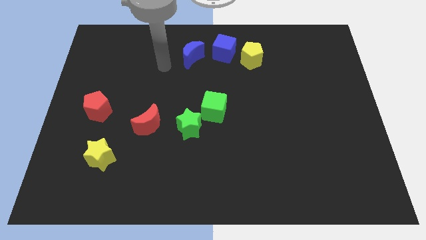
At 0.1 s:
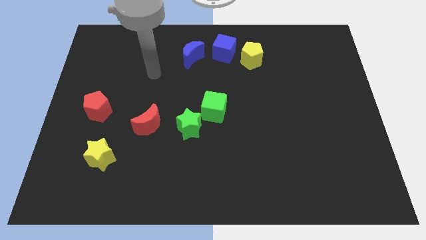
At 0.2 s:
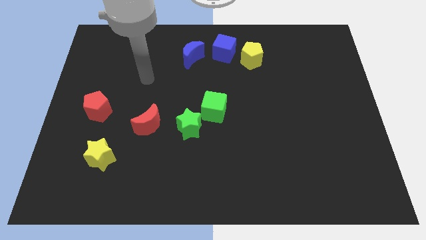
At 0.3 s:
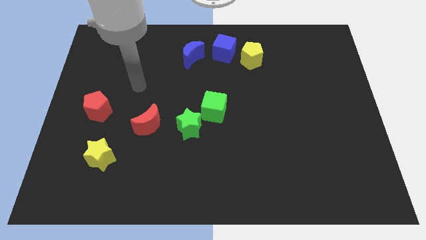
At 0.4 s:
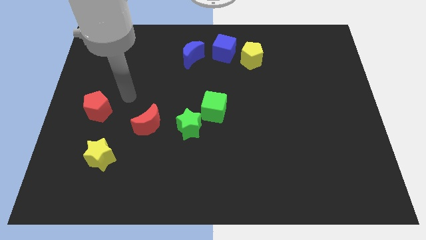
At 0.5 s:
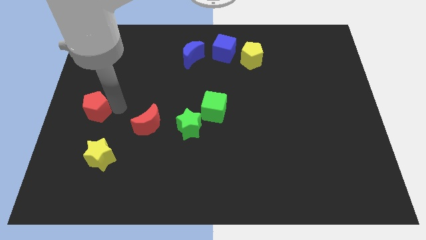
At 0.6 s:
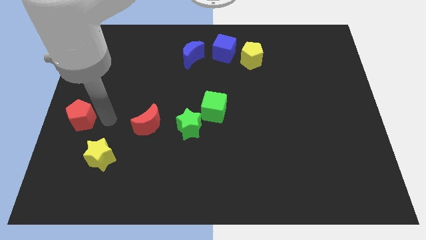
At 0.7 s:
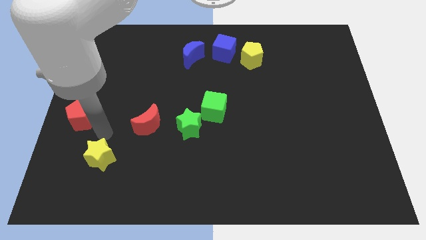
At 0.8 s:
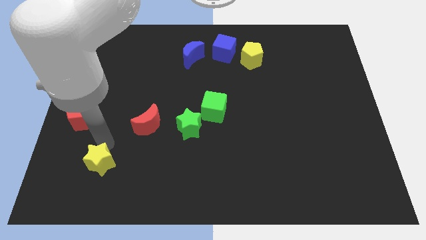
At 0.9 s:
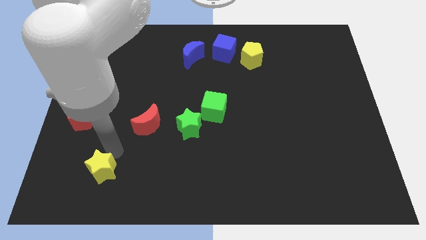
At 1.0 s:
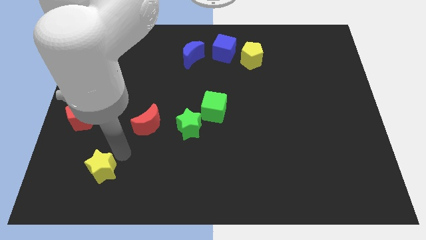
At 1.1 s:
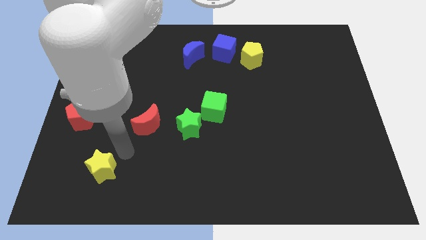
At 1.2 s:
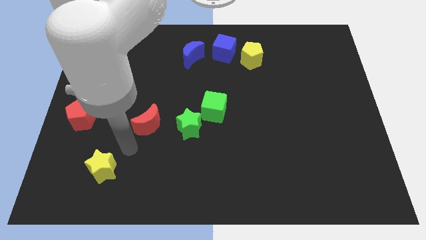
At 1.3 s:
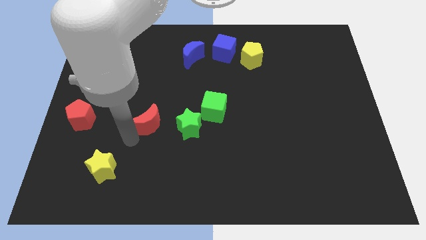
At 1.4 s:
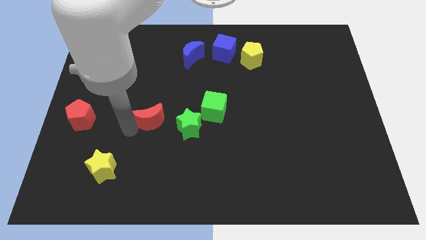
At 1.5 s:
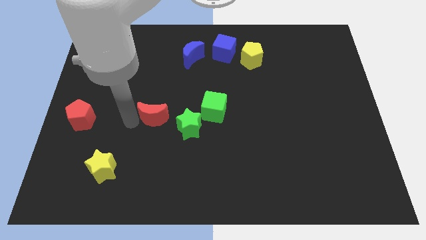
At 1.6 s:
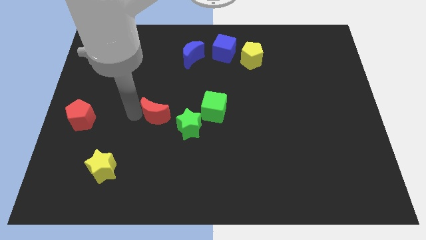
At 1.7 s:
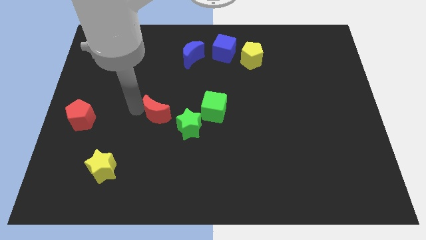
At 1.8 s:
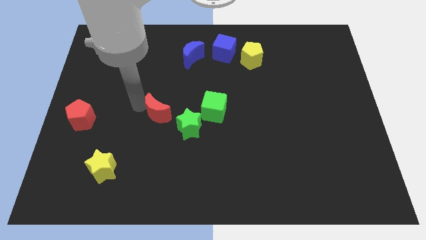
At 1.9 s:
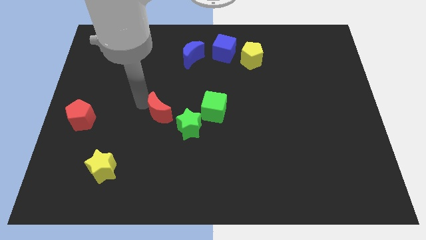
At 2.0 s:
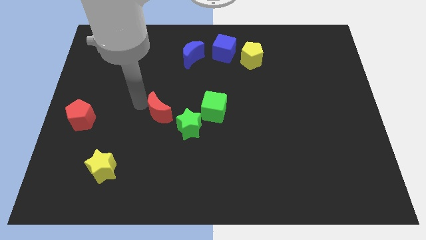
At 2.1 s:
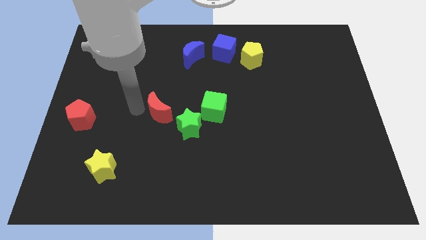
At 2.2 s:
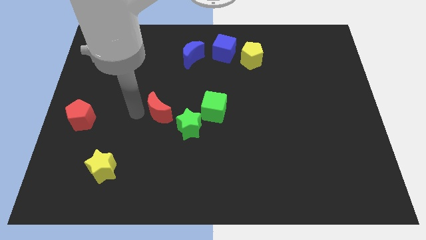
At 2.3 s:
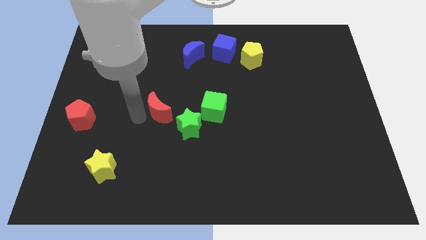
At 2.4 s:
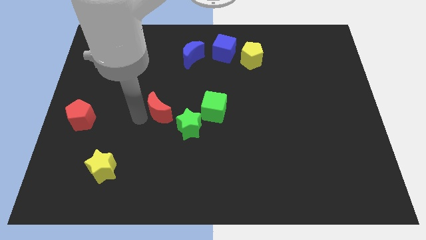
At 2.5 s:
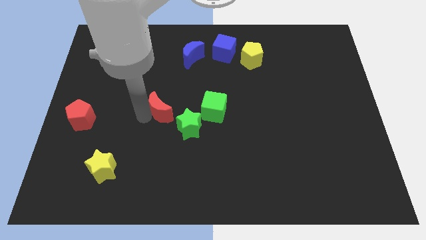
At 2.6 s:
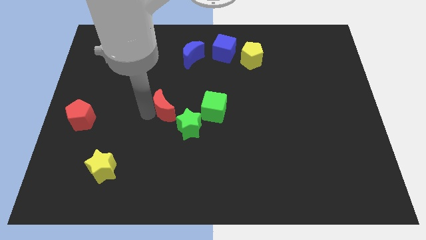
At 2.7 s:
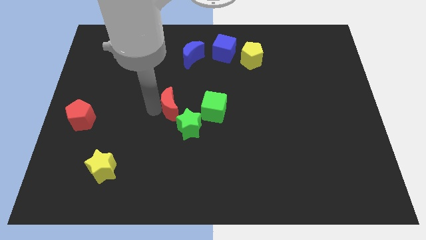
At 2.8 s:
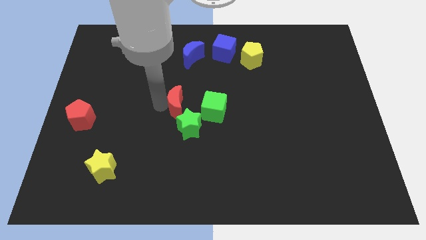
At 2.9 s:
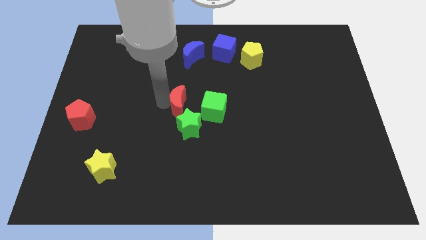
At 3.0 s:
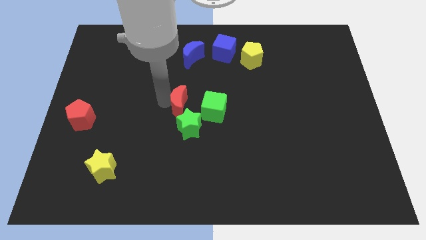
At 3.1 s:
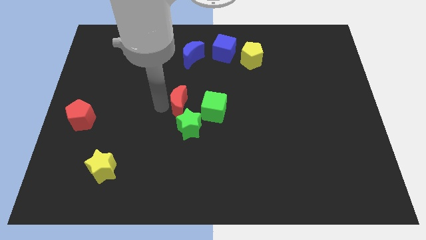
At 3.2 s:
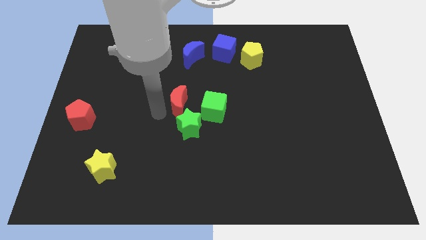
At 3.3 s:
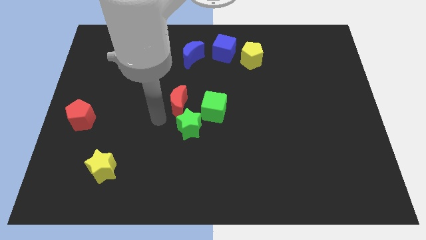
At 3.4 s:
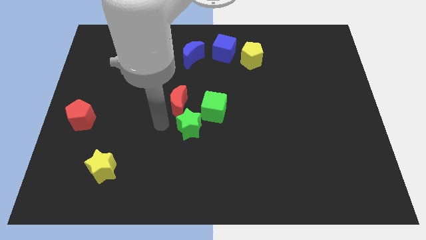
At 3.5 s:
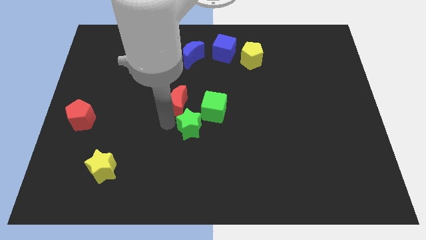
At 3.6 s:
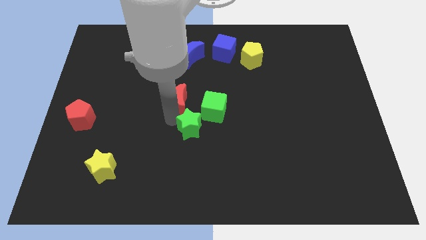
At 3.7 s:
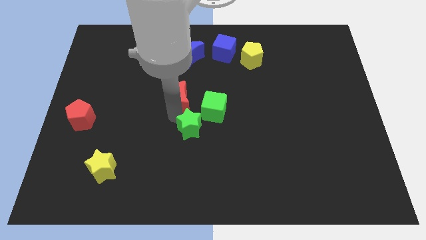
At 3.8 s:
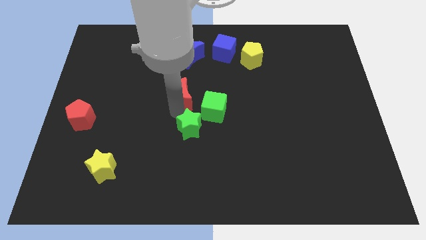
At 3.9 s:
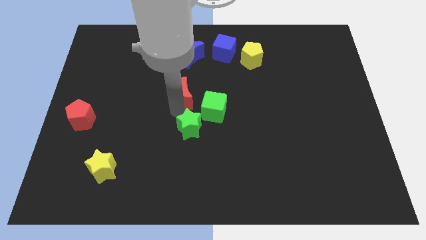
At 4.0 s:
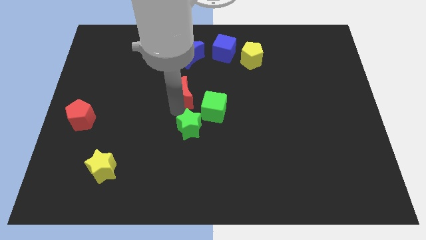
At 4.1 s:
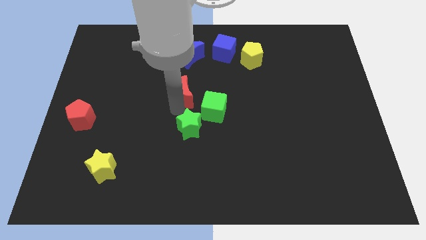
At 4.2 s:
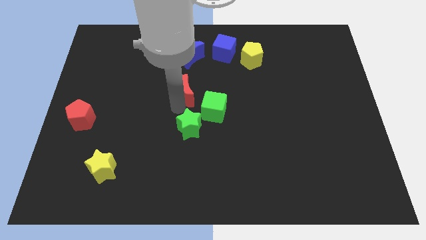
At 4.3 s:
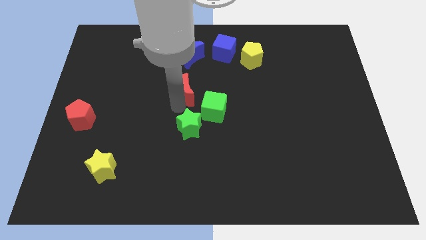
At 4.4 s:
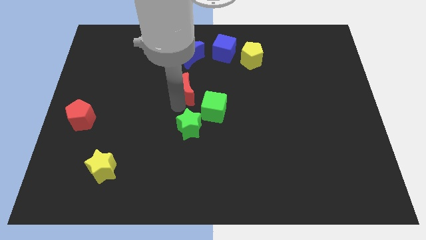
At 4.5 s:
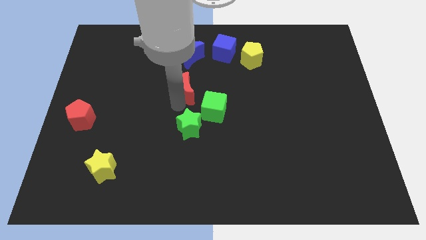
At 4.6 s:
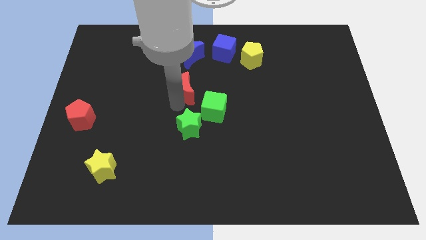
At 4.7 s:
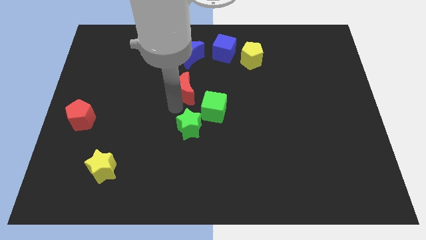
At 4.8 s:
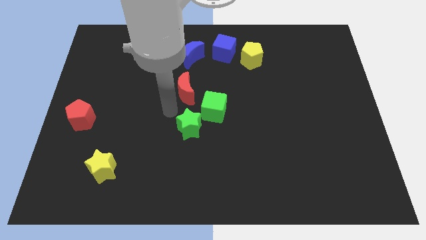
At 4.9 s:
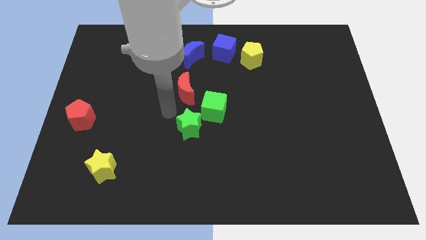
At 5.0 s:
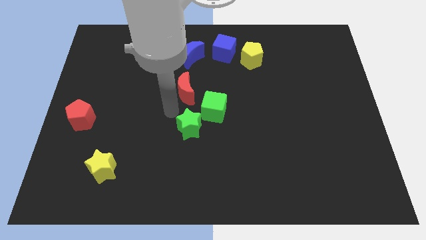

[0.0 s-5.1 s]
place the red crescent in between the blue crescent and the green star

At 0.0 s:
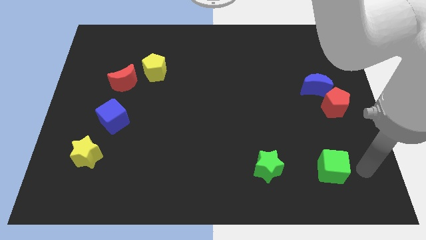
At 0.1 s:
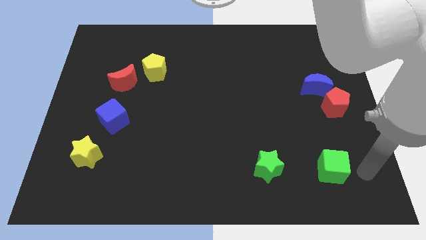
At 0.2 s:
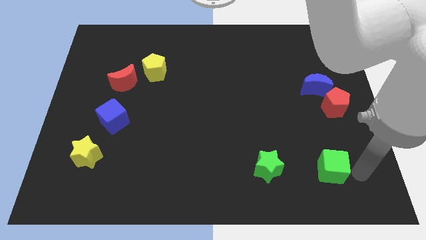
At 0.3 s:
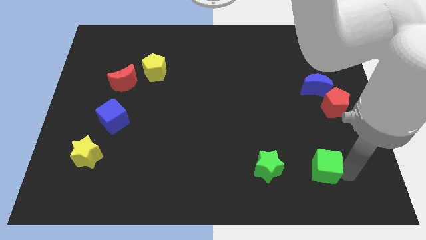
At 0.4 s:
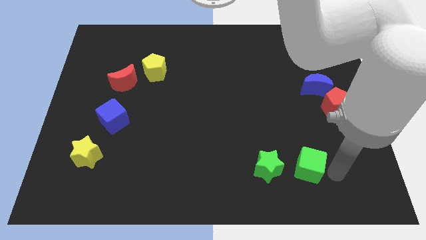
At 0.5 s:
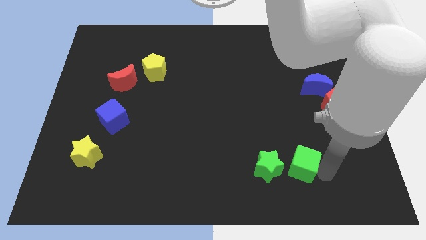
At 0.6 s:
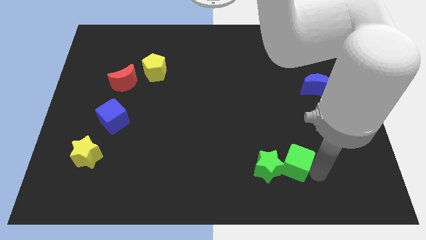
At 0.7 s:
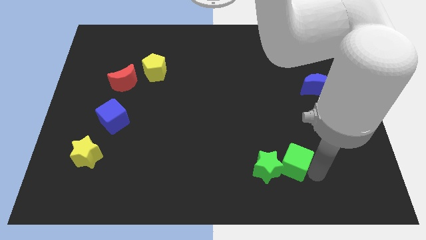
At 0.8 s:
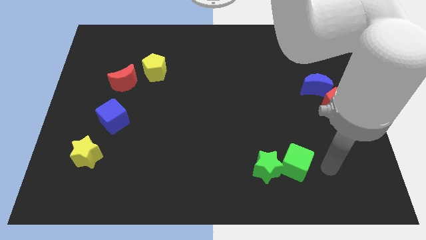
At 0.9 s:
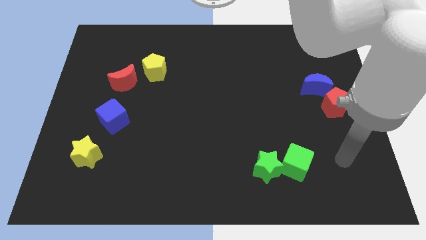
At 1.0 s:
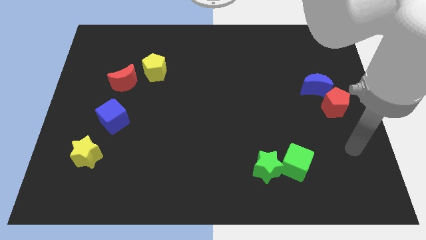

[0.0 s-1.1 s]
push green cube in to green star

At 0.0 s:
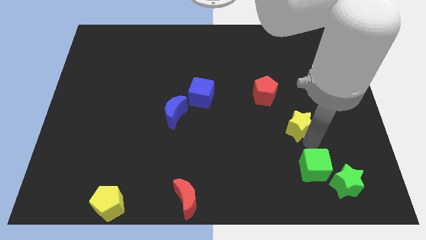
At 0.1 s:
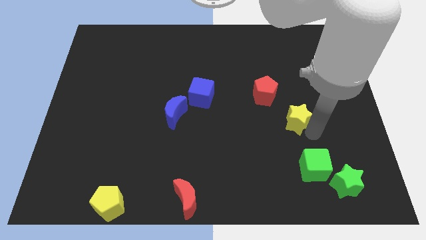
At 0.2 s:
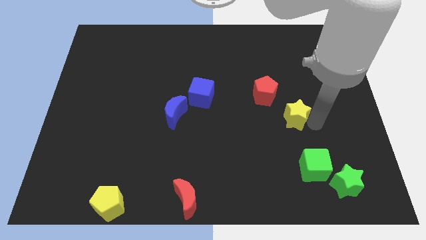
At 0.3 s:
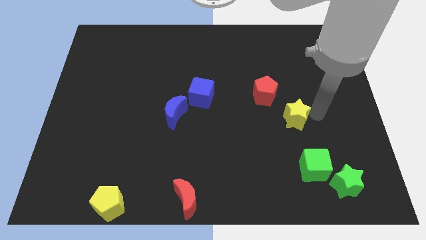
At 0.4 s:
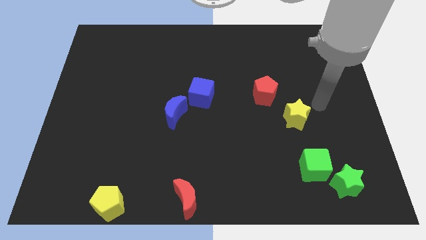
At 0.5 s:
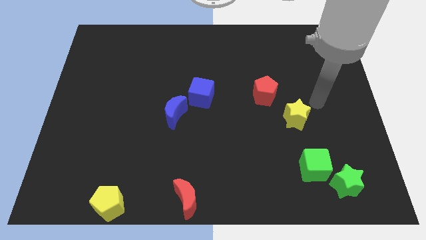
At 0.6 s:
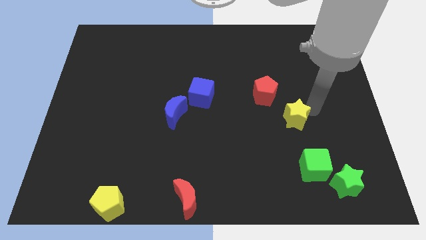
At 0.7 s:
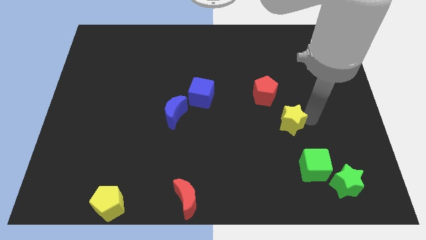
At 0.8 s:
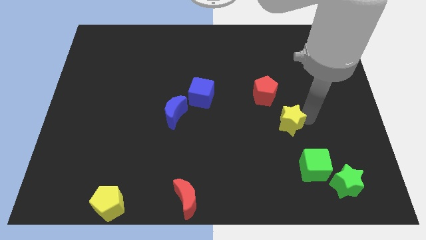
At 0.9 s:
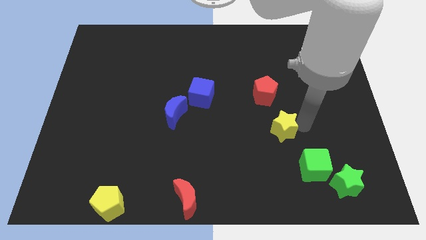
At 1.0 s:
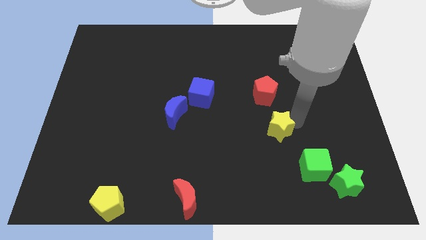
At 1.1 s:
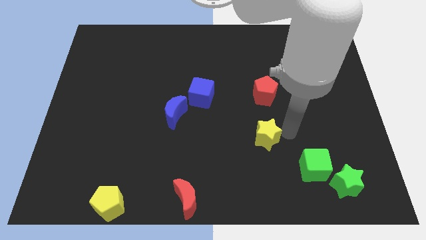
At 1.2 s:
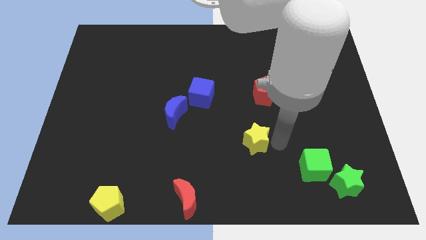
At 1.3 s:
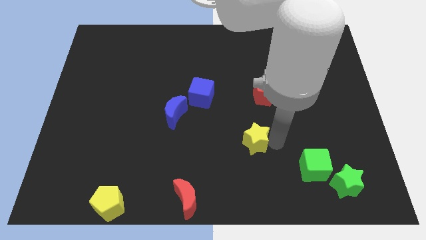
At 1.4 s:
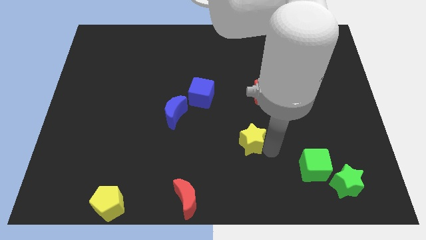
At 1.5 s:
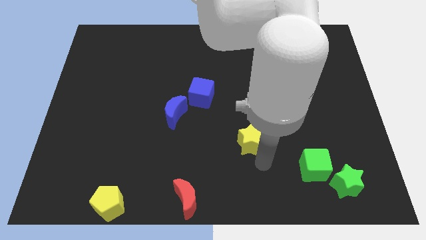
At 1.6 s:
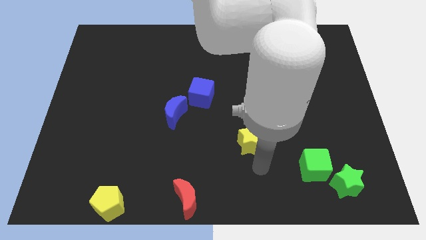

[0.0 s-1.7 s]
put the yellow star between the red moon and red pentagon

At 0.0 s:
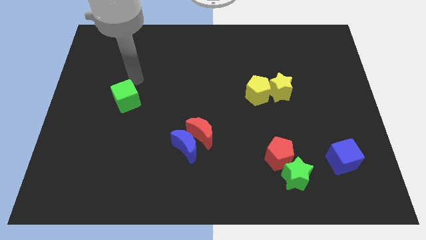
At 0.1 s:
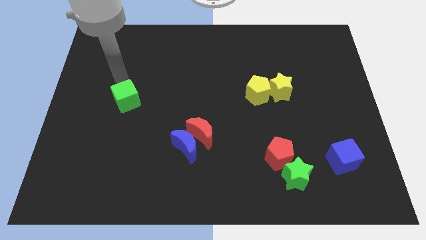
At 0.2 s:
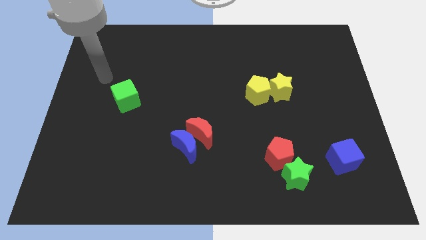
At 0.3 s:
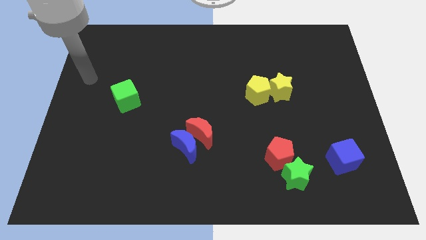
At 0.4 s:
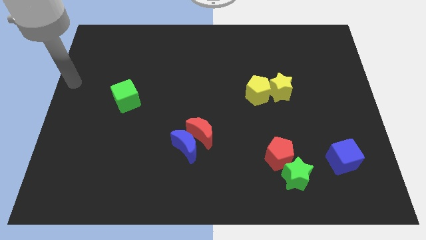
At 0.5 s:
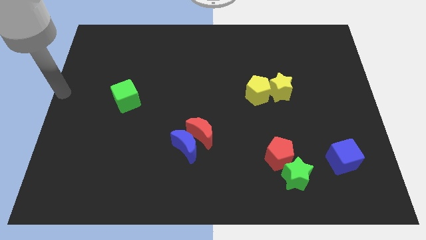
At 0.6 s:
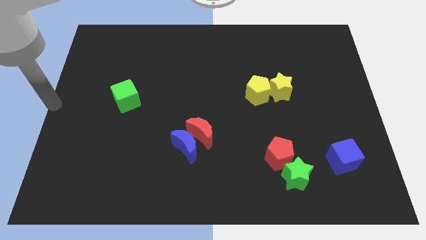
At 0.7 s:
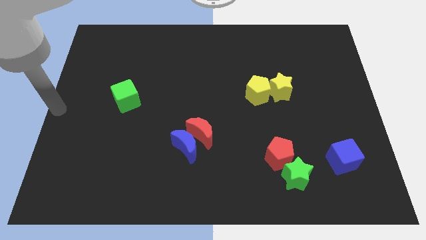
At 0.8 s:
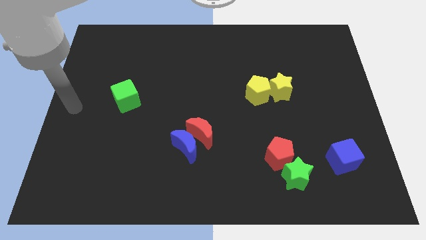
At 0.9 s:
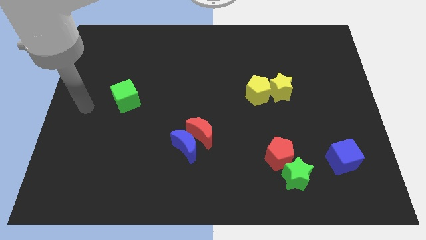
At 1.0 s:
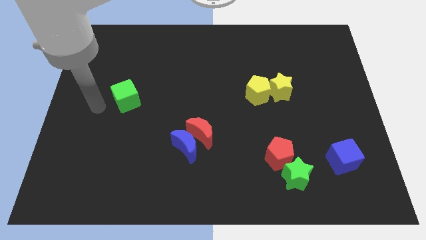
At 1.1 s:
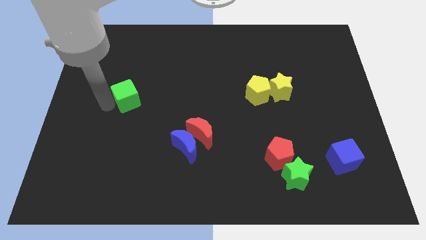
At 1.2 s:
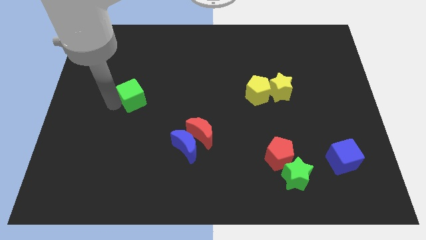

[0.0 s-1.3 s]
place your arm to the left of green cube
